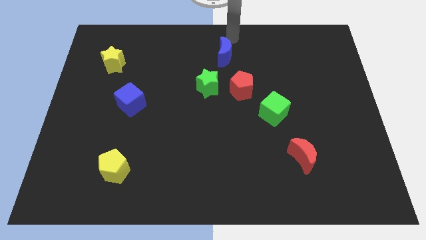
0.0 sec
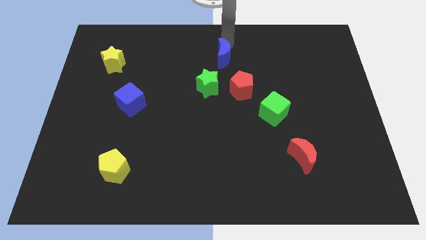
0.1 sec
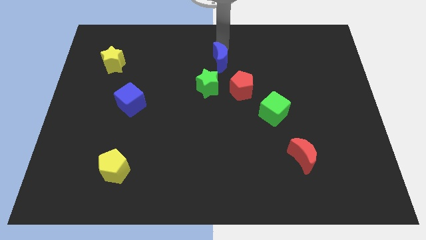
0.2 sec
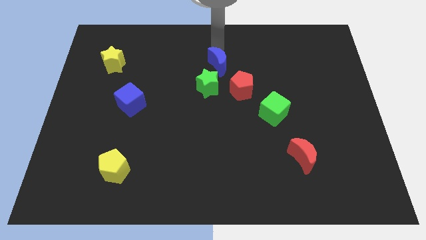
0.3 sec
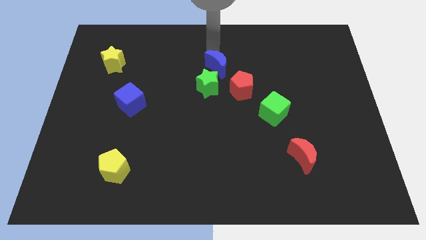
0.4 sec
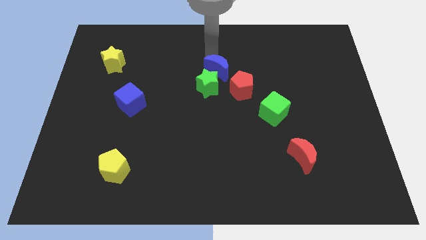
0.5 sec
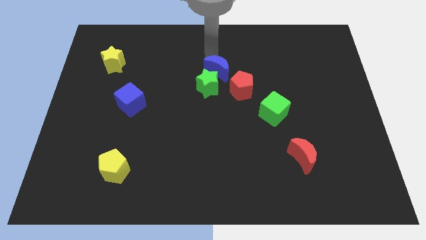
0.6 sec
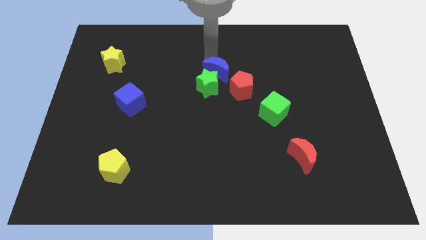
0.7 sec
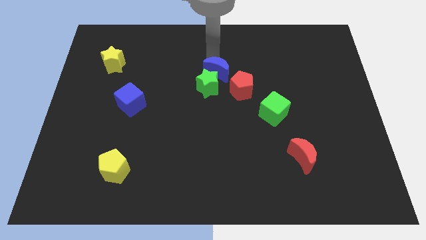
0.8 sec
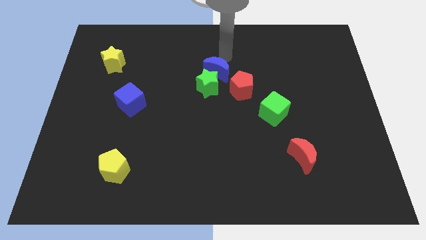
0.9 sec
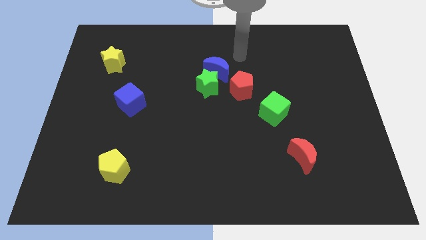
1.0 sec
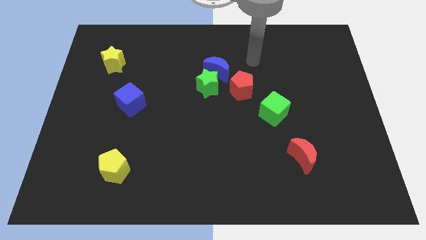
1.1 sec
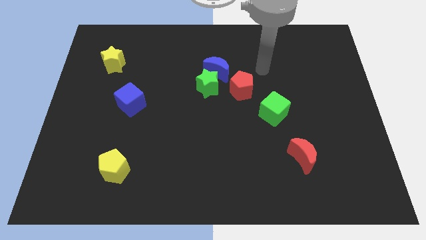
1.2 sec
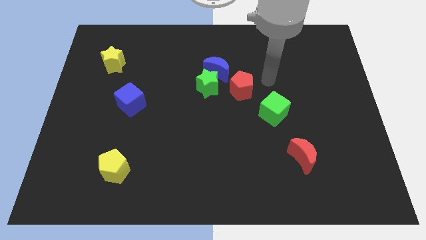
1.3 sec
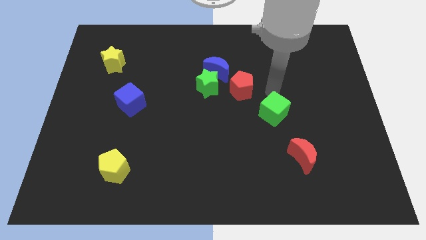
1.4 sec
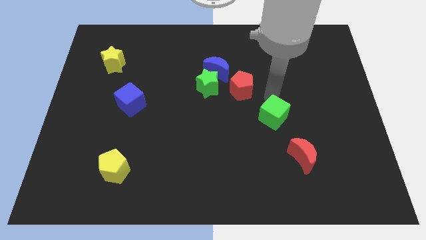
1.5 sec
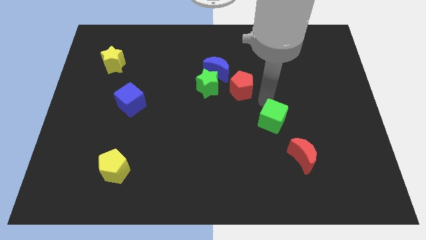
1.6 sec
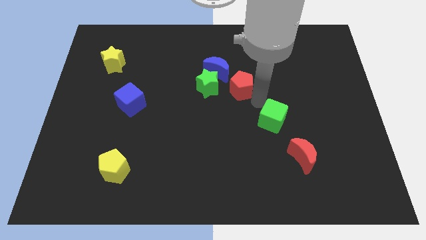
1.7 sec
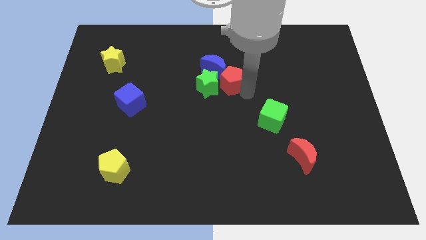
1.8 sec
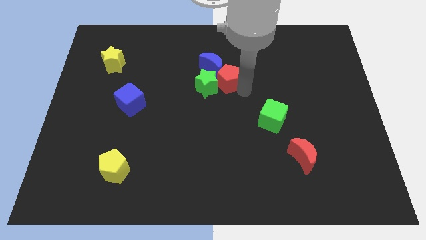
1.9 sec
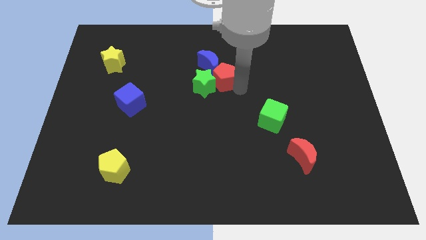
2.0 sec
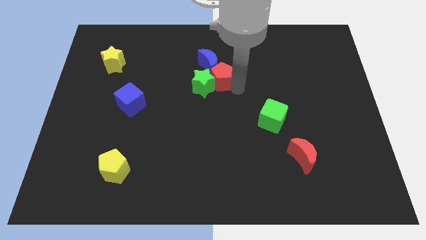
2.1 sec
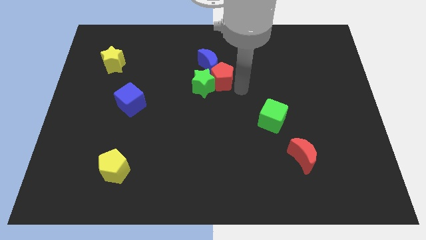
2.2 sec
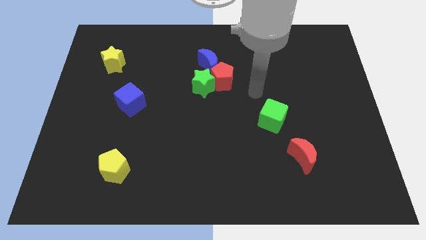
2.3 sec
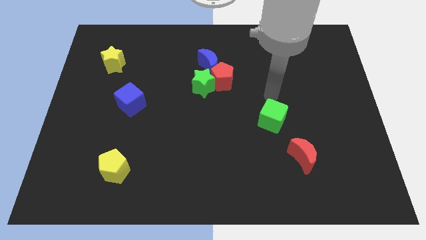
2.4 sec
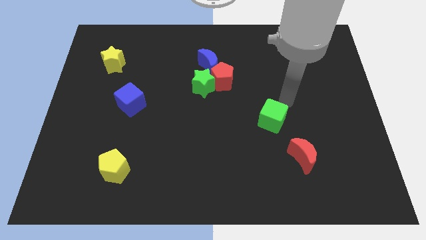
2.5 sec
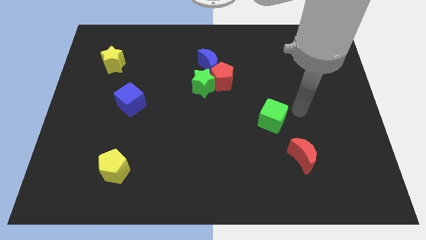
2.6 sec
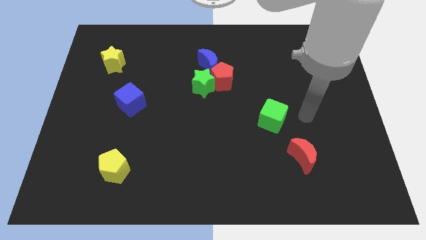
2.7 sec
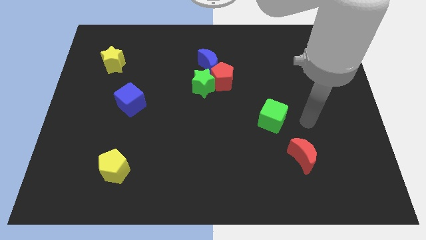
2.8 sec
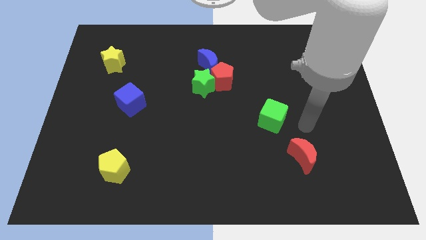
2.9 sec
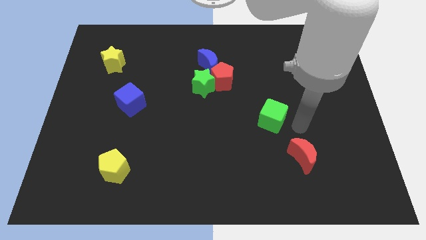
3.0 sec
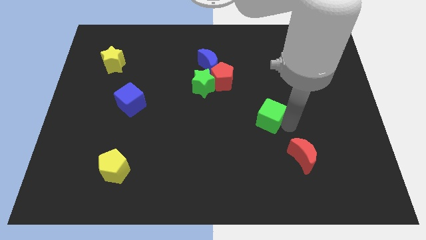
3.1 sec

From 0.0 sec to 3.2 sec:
move green star red pentagon and blue moon slightly up

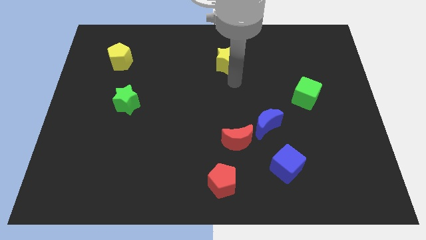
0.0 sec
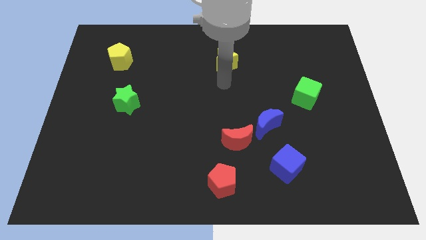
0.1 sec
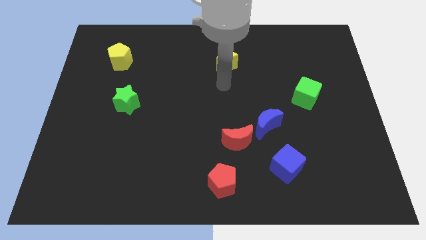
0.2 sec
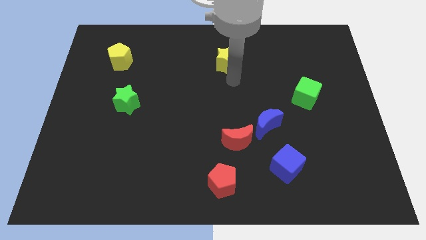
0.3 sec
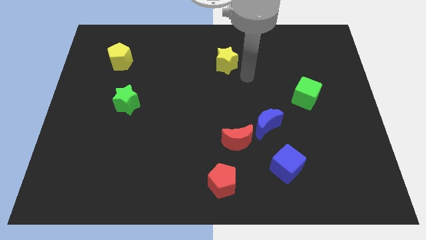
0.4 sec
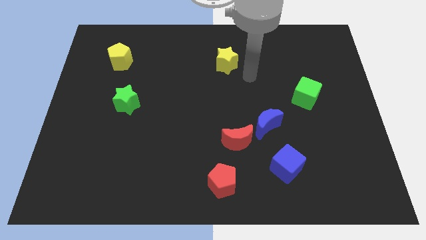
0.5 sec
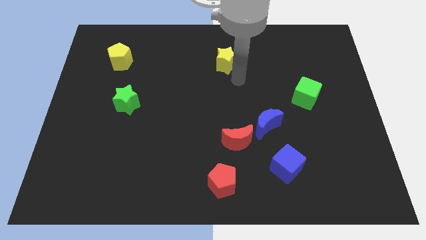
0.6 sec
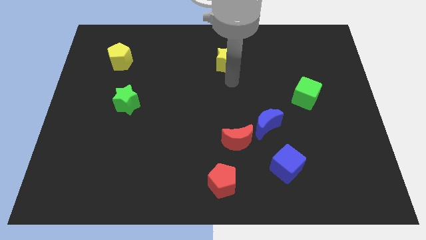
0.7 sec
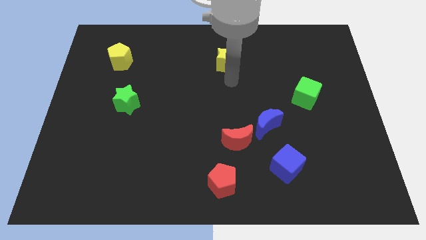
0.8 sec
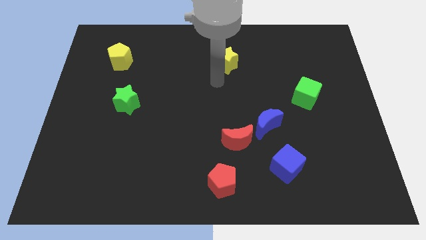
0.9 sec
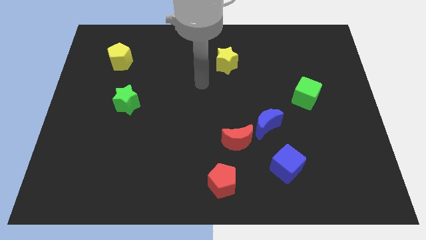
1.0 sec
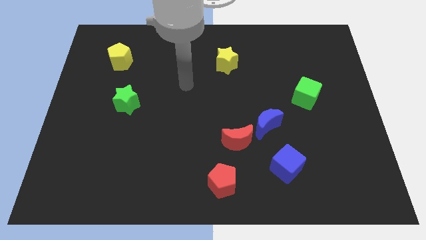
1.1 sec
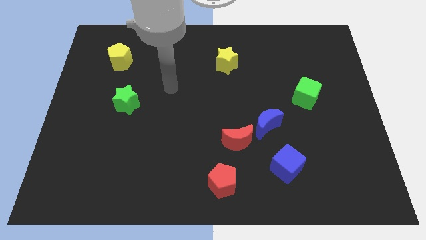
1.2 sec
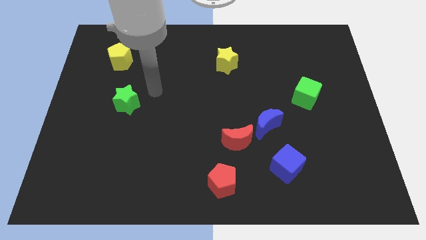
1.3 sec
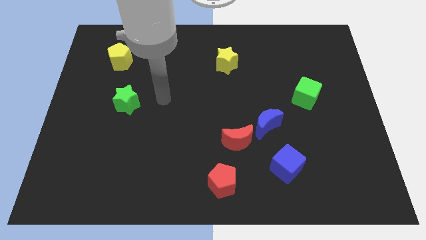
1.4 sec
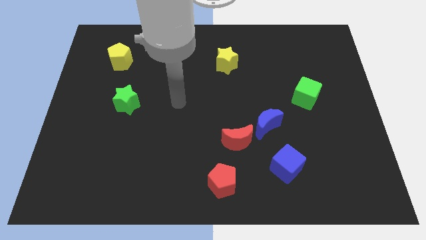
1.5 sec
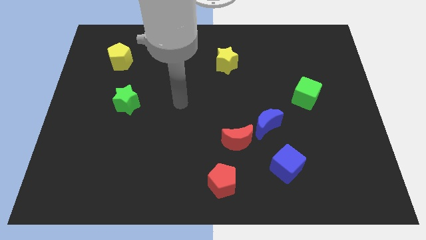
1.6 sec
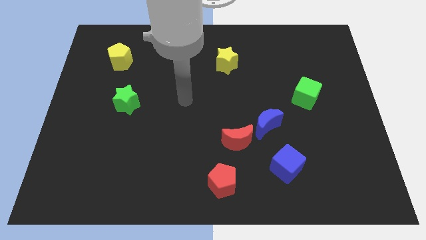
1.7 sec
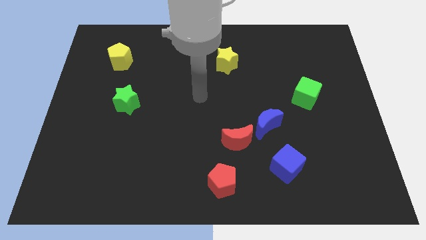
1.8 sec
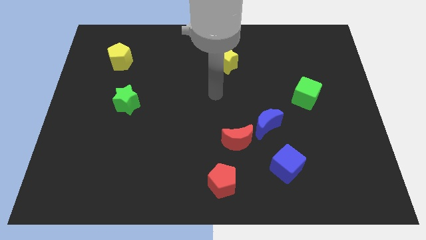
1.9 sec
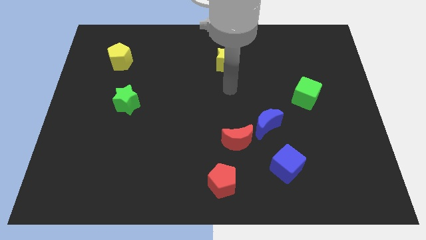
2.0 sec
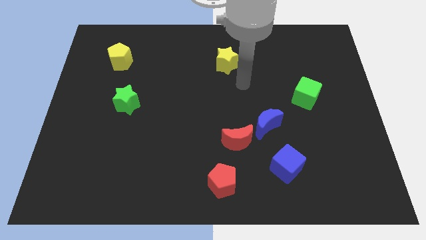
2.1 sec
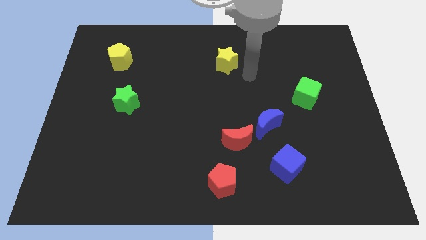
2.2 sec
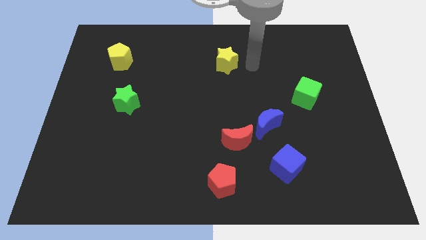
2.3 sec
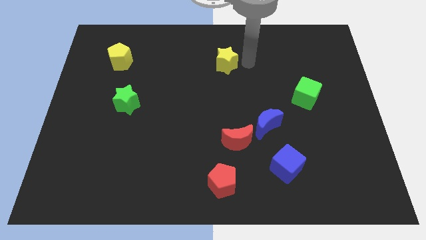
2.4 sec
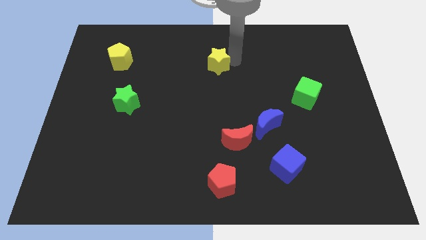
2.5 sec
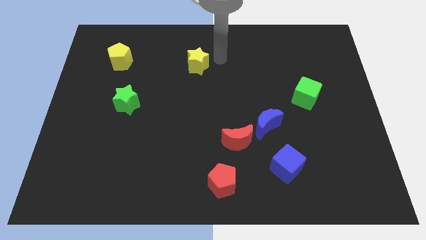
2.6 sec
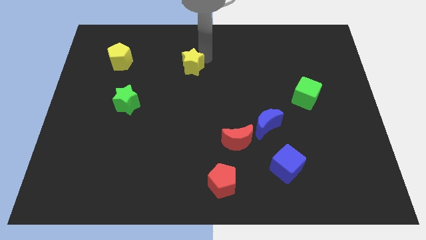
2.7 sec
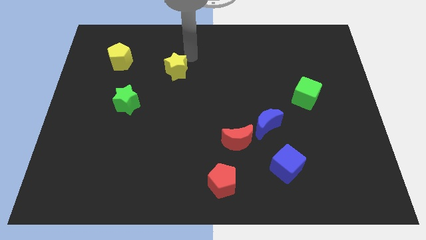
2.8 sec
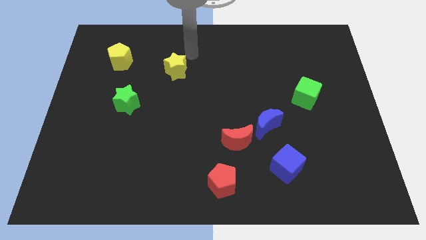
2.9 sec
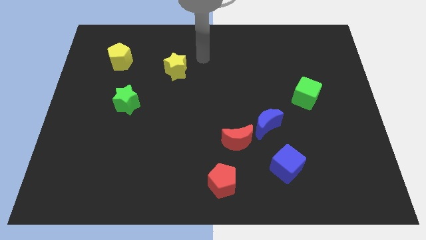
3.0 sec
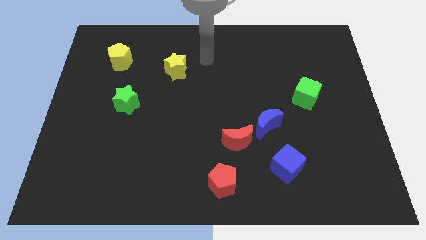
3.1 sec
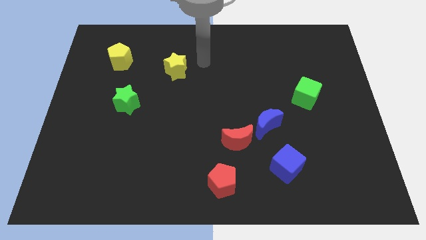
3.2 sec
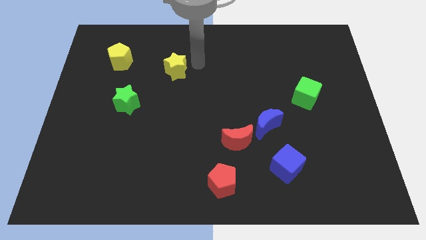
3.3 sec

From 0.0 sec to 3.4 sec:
push the yellow star diagonally top right to the green star

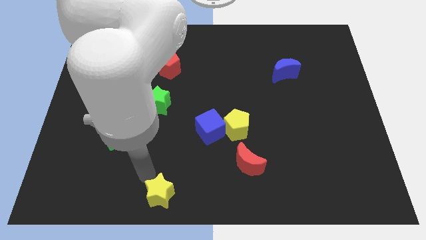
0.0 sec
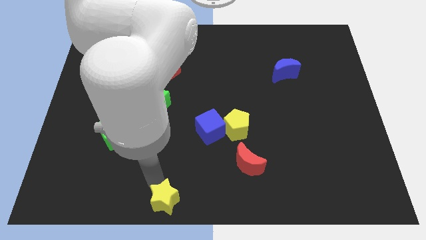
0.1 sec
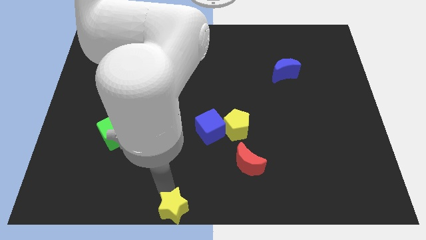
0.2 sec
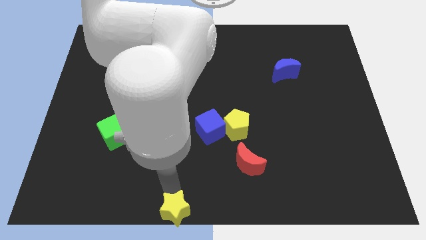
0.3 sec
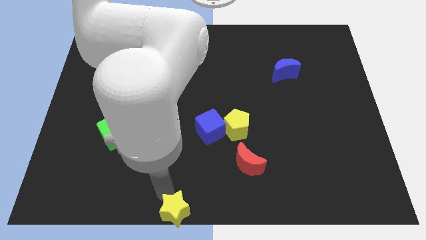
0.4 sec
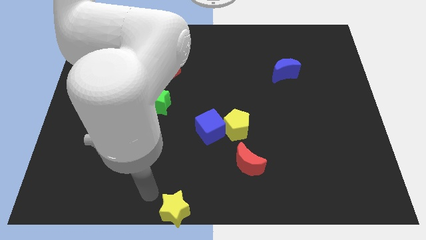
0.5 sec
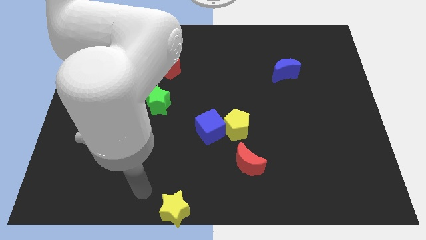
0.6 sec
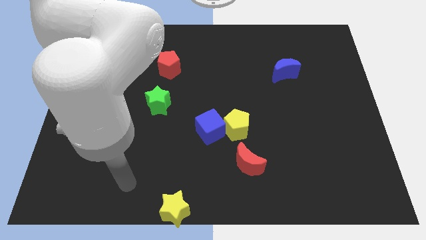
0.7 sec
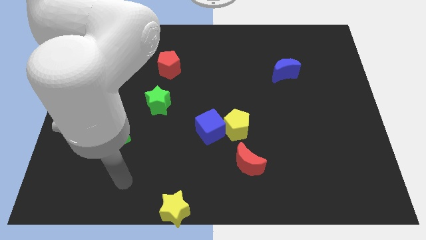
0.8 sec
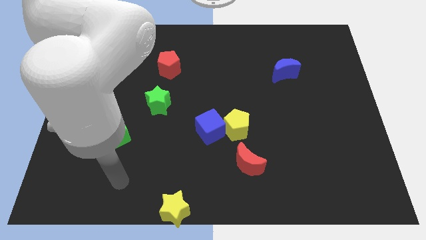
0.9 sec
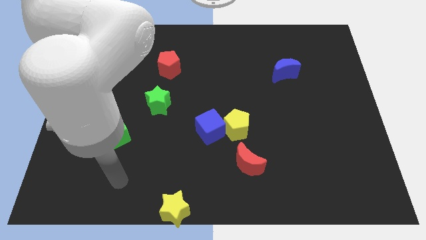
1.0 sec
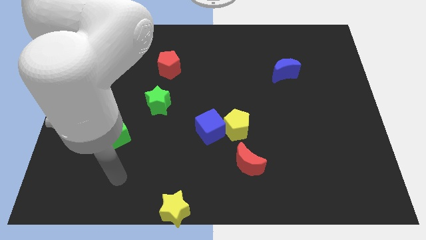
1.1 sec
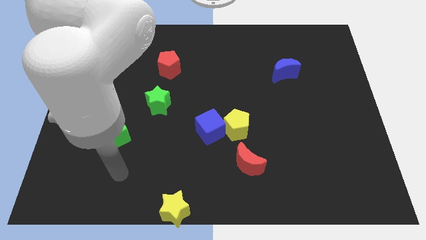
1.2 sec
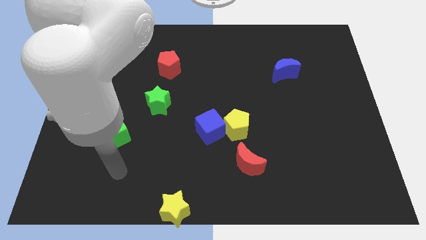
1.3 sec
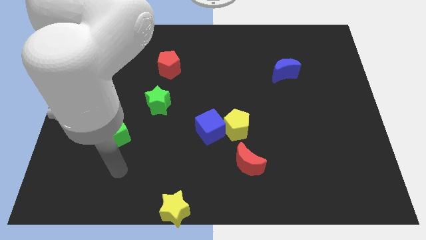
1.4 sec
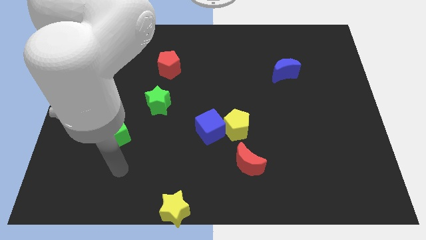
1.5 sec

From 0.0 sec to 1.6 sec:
push the yellow star to the bottom center of the board

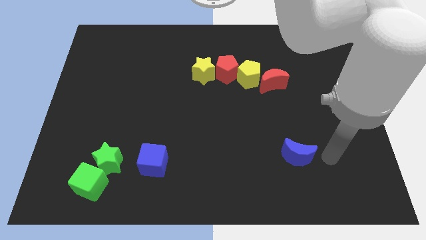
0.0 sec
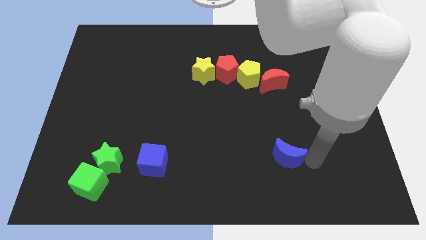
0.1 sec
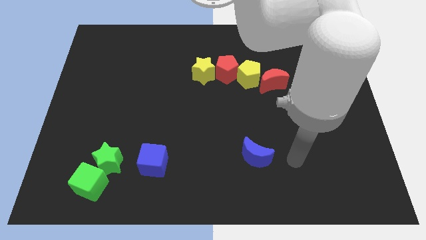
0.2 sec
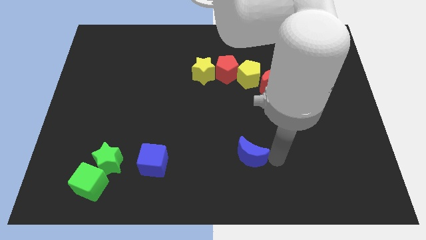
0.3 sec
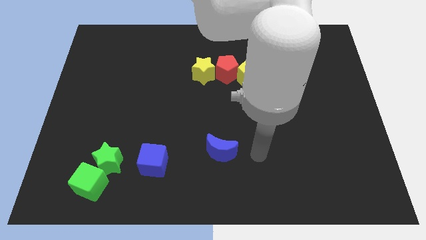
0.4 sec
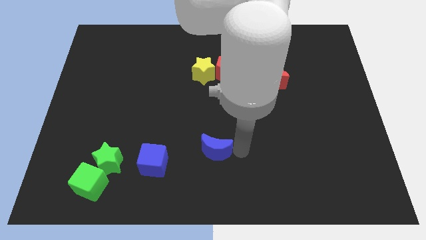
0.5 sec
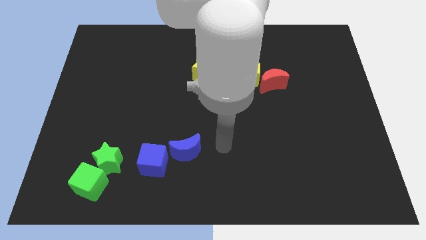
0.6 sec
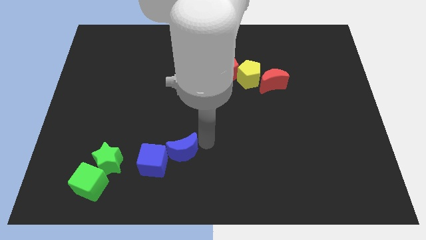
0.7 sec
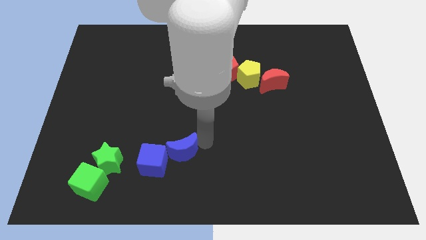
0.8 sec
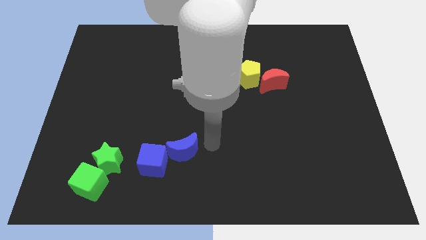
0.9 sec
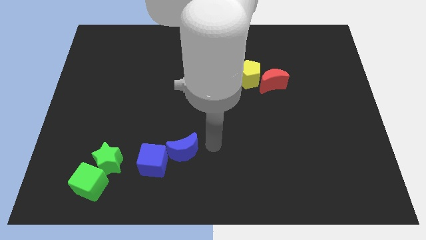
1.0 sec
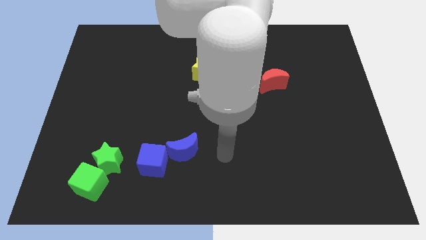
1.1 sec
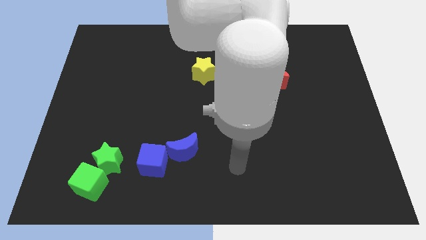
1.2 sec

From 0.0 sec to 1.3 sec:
place the blue crescent top right to the blue cube
